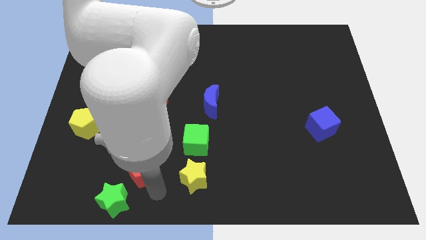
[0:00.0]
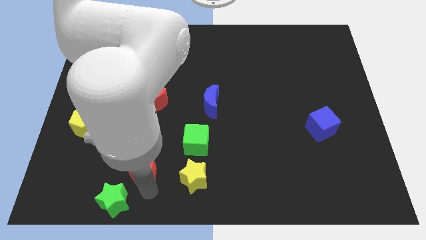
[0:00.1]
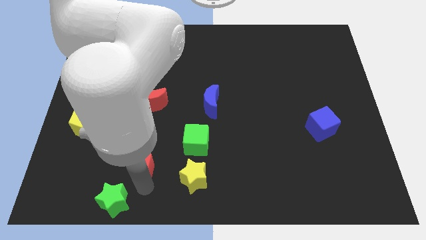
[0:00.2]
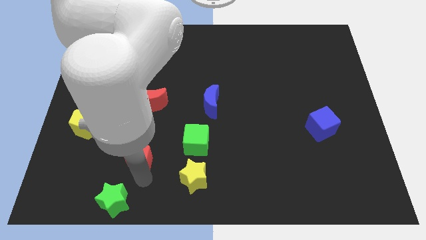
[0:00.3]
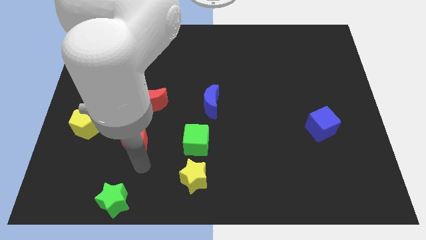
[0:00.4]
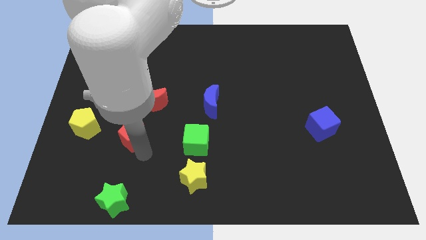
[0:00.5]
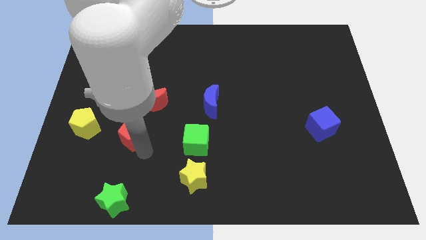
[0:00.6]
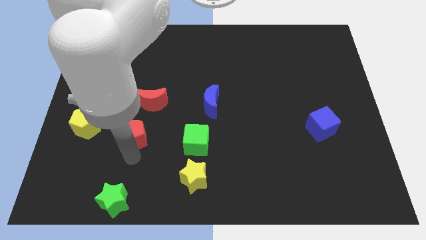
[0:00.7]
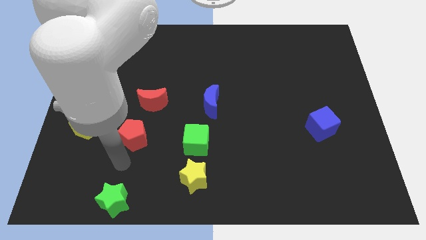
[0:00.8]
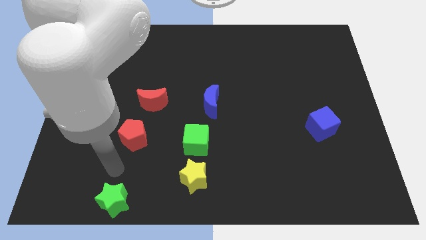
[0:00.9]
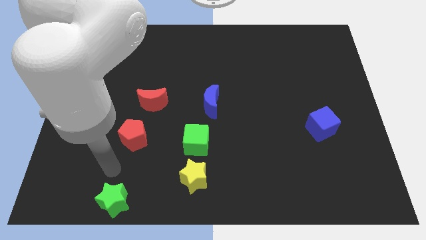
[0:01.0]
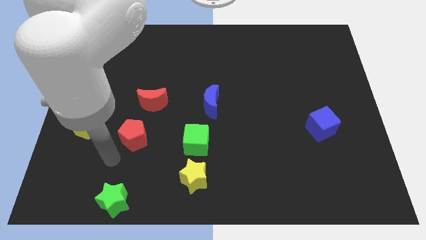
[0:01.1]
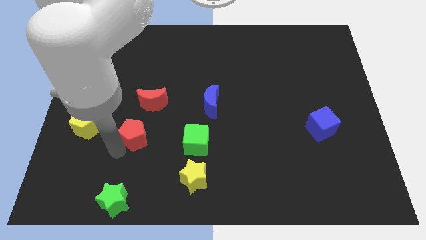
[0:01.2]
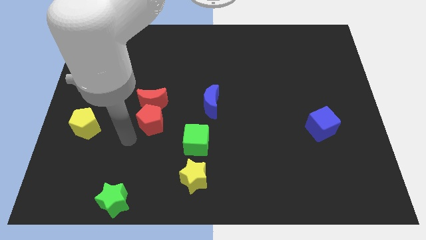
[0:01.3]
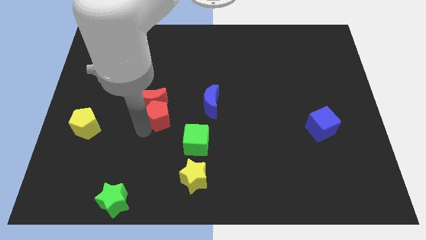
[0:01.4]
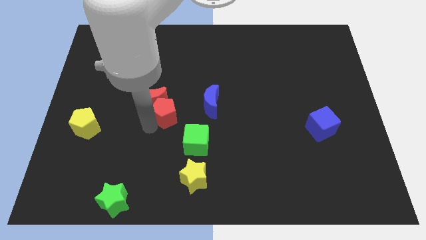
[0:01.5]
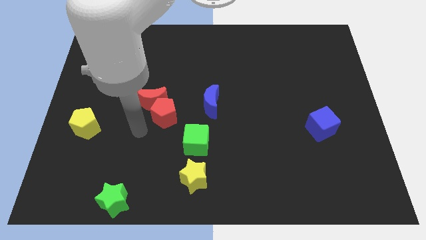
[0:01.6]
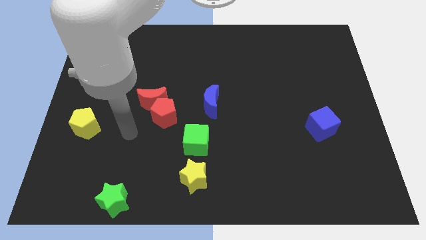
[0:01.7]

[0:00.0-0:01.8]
push red pentagon into the red crescent

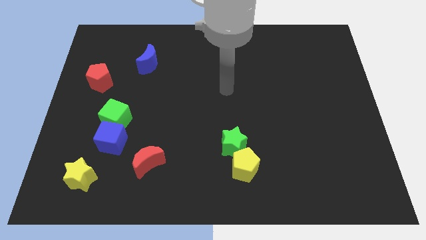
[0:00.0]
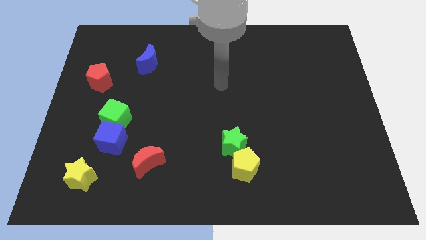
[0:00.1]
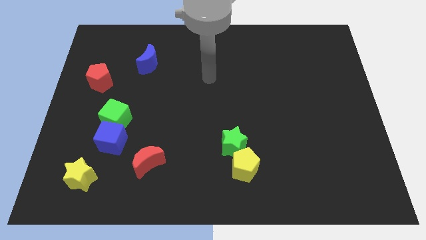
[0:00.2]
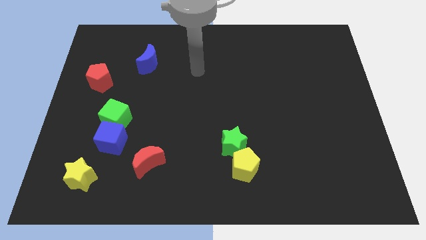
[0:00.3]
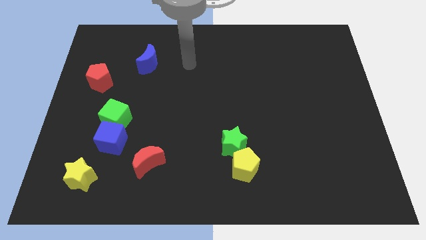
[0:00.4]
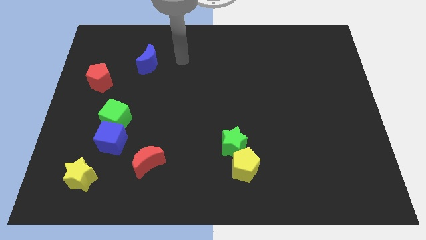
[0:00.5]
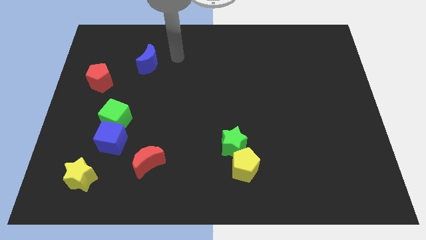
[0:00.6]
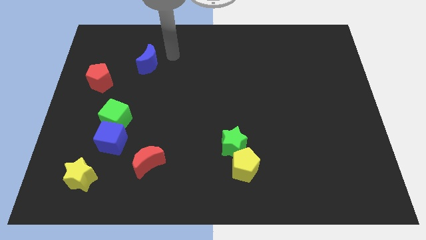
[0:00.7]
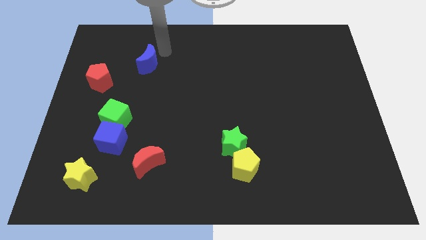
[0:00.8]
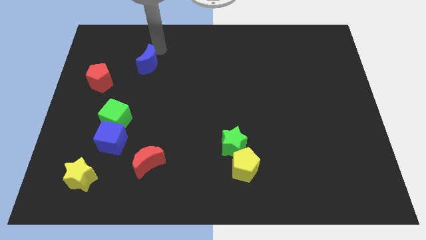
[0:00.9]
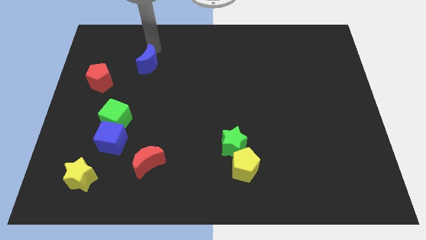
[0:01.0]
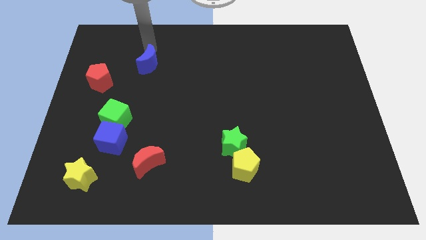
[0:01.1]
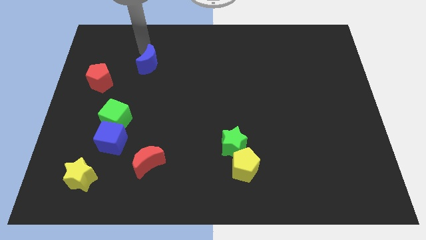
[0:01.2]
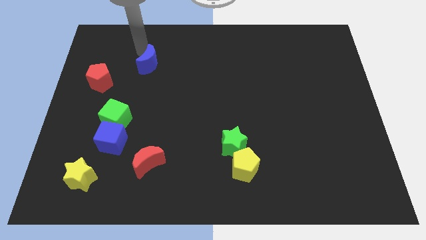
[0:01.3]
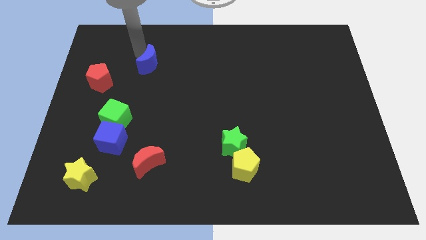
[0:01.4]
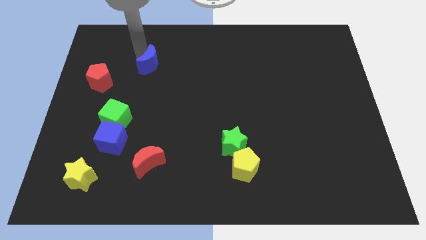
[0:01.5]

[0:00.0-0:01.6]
move your arm to the left of blue crescent

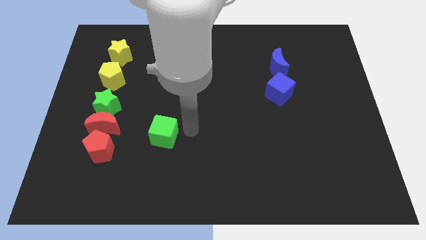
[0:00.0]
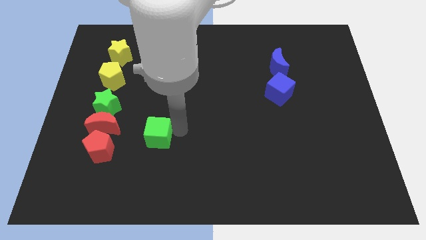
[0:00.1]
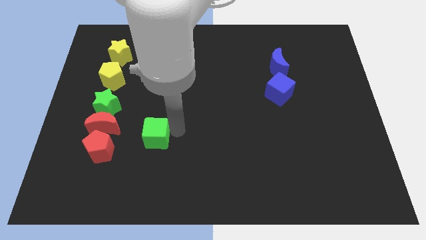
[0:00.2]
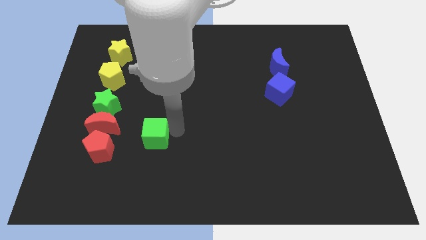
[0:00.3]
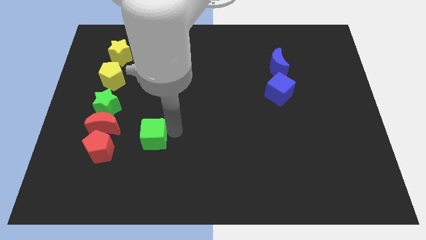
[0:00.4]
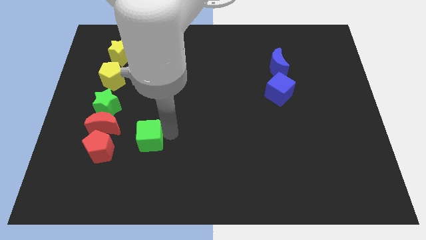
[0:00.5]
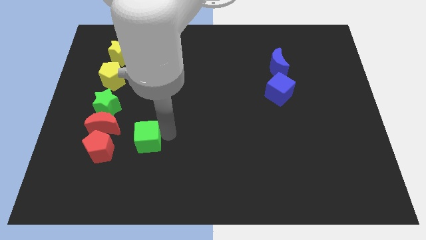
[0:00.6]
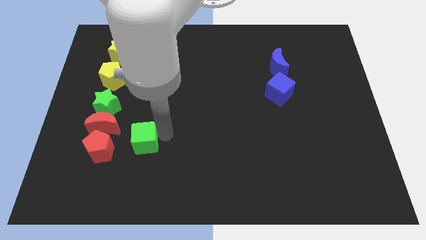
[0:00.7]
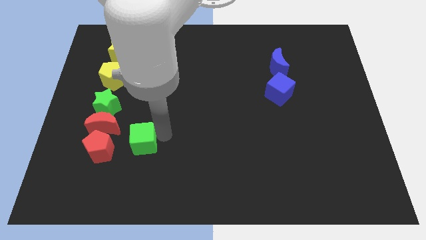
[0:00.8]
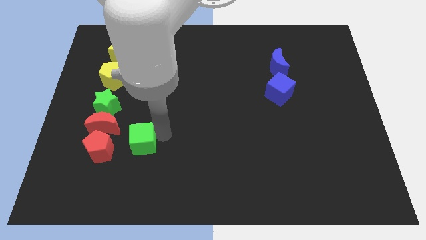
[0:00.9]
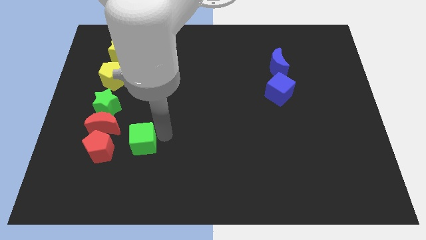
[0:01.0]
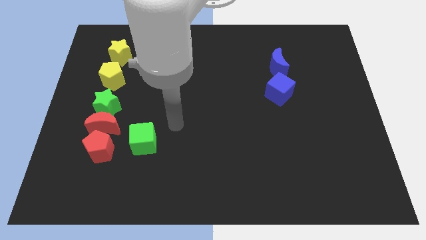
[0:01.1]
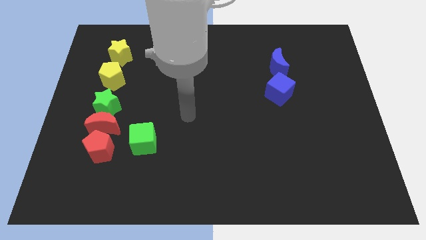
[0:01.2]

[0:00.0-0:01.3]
push the green cube to the right of the red pentagon

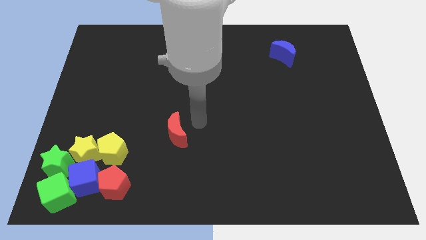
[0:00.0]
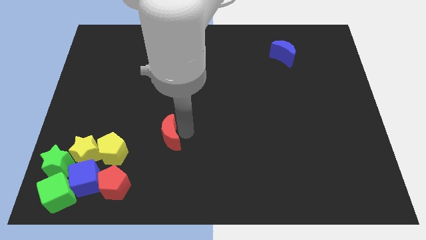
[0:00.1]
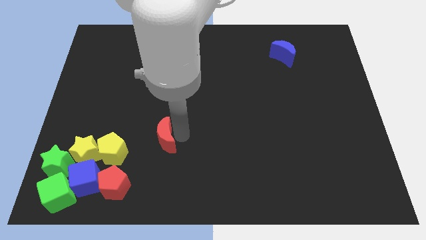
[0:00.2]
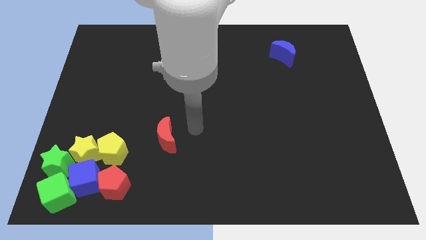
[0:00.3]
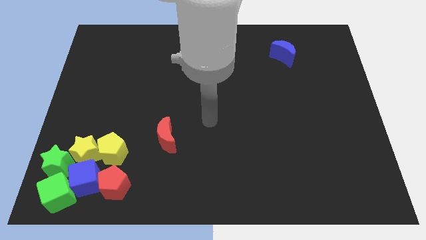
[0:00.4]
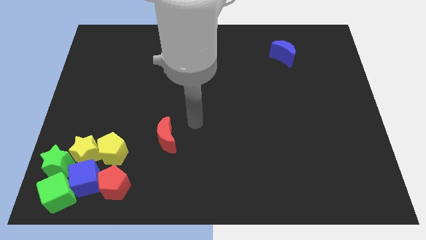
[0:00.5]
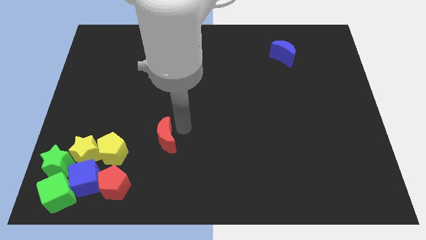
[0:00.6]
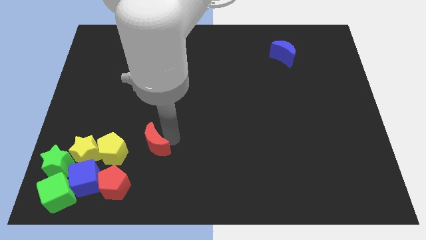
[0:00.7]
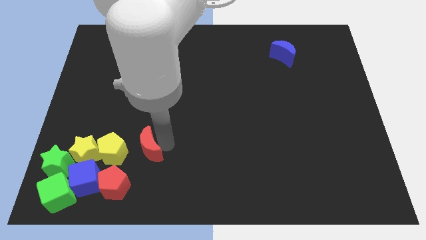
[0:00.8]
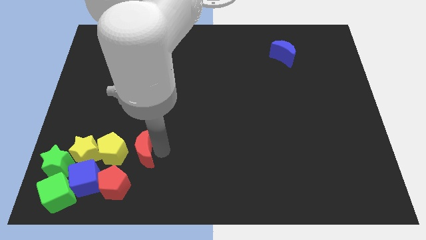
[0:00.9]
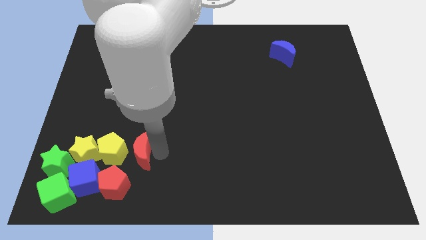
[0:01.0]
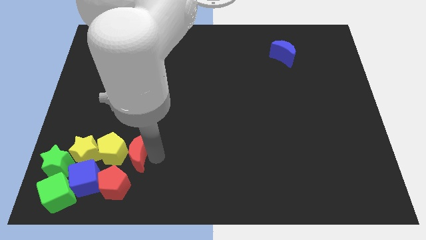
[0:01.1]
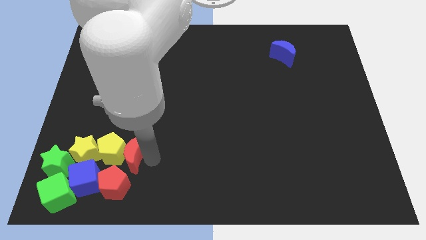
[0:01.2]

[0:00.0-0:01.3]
place the red moon right to the yellow pentagon

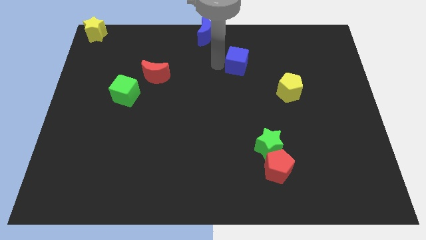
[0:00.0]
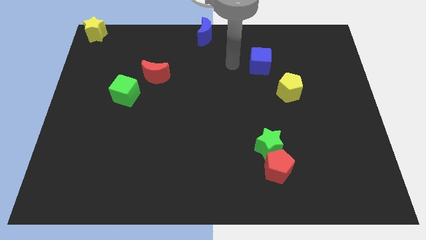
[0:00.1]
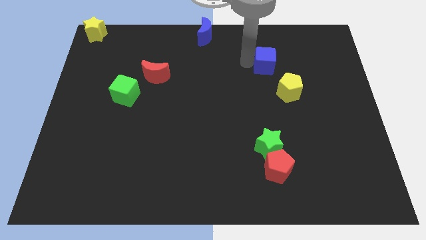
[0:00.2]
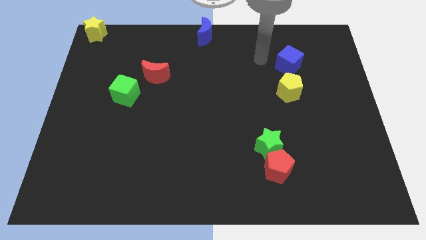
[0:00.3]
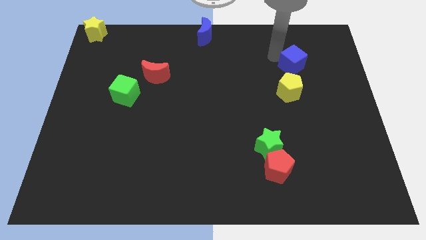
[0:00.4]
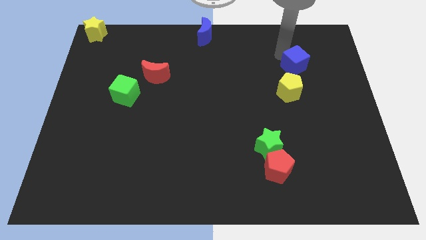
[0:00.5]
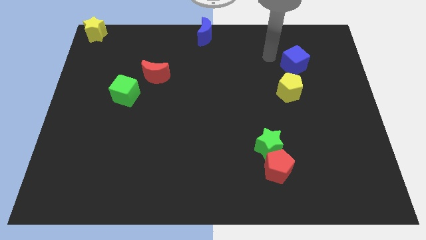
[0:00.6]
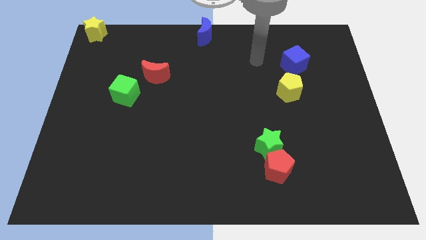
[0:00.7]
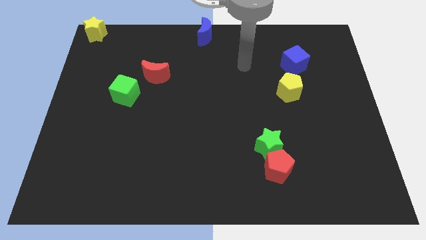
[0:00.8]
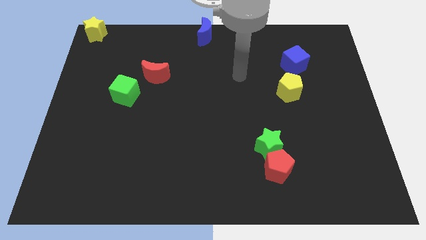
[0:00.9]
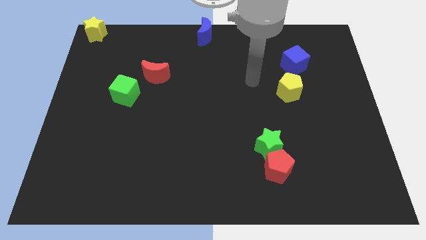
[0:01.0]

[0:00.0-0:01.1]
move the blue cube above the yellow pentagon

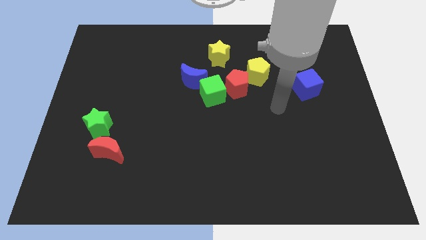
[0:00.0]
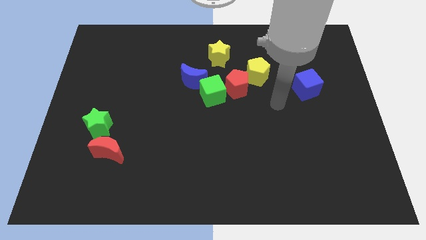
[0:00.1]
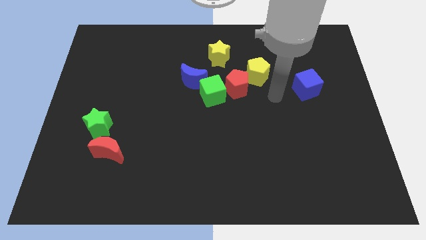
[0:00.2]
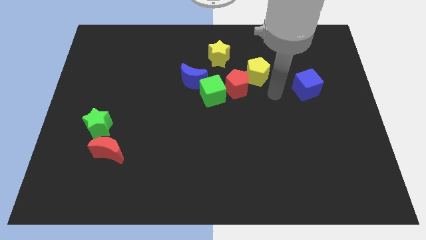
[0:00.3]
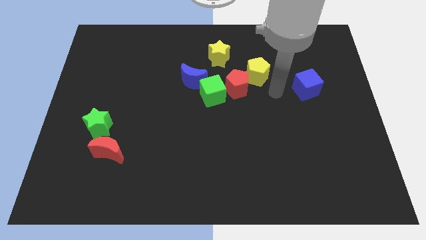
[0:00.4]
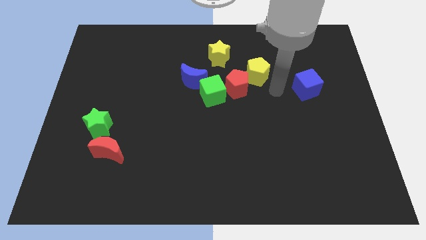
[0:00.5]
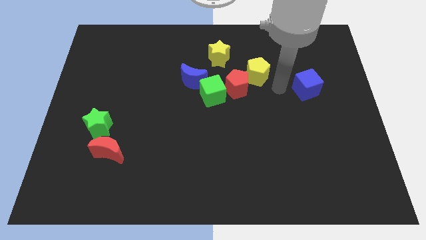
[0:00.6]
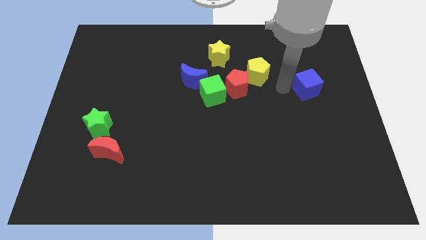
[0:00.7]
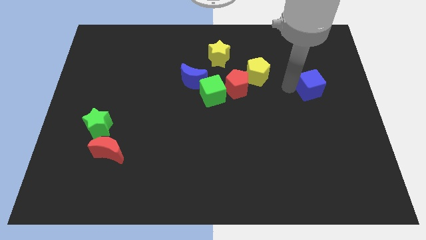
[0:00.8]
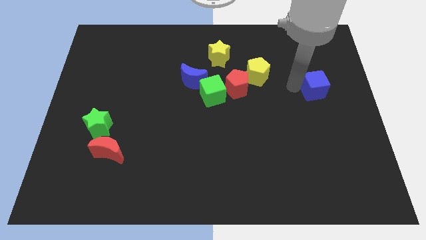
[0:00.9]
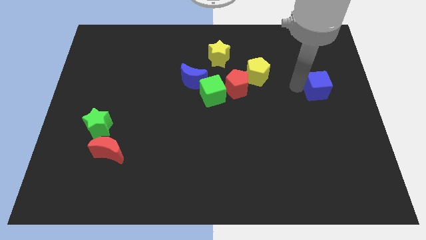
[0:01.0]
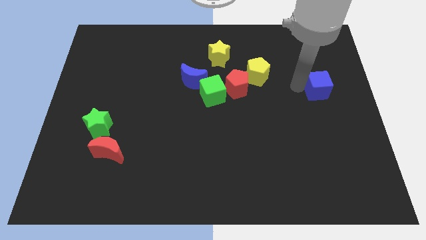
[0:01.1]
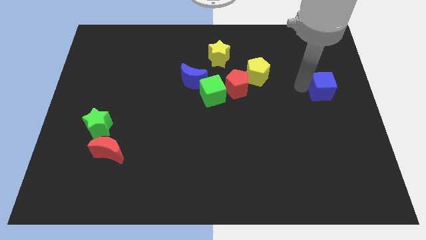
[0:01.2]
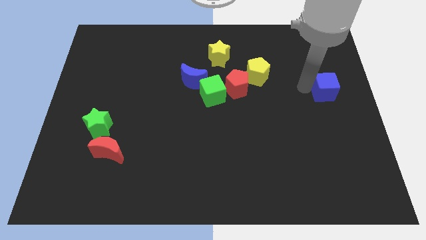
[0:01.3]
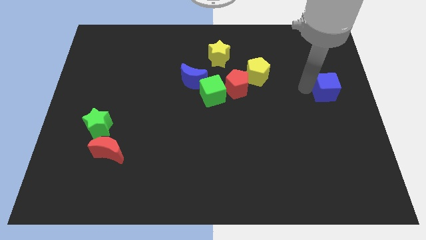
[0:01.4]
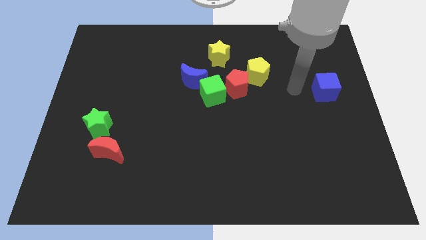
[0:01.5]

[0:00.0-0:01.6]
drag the blue cube slightly to the right
